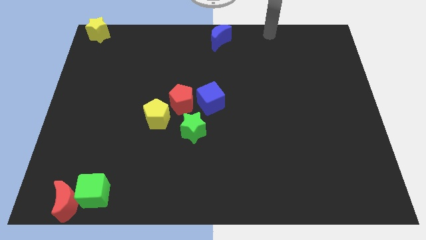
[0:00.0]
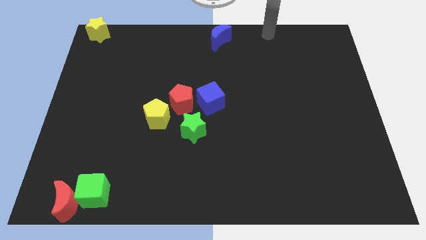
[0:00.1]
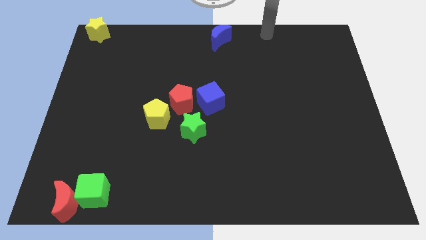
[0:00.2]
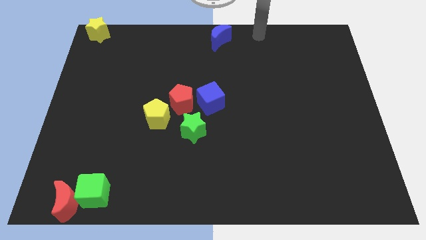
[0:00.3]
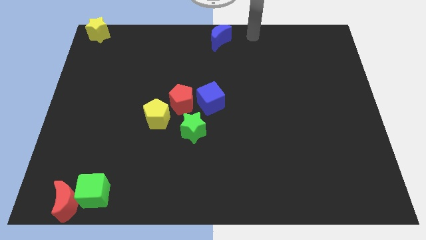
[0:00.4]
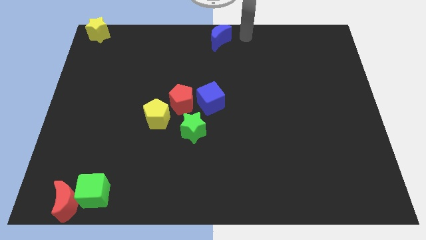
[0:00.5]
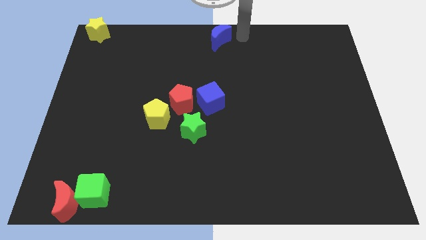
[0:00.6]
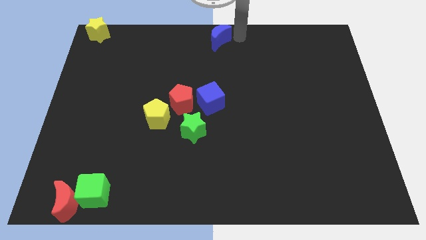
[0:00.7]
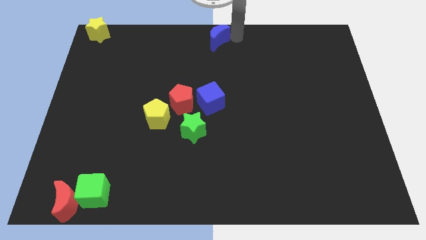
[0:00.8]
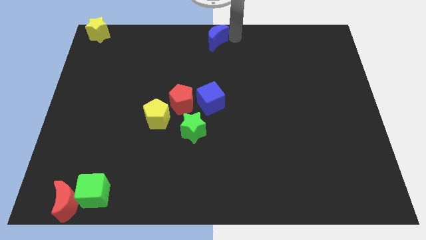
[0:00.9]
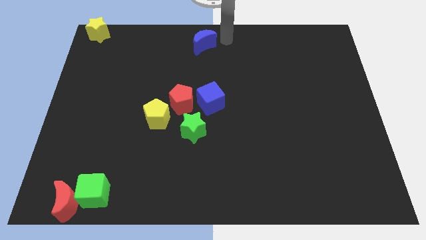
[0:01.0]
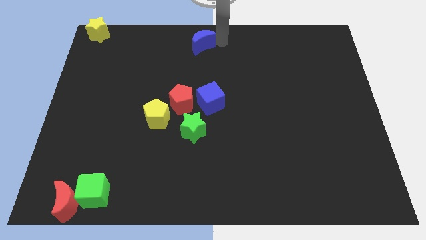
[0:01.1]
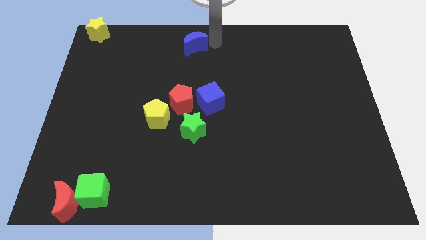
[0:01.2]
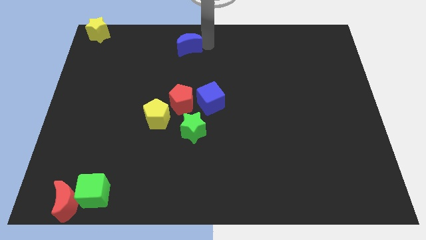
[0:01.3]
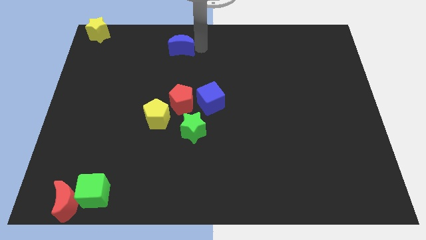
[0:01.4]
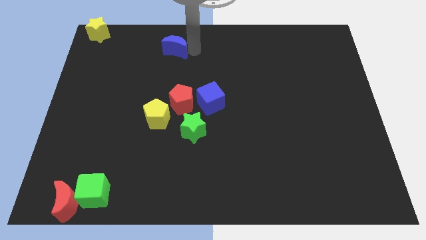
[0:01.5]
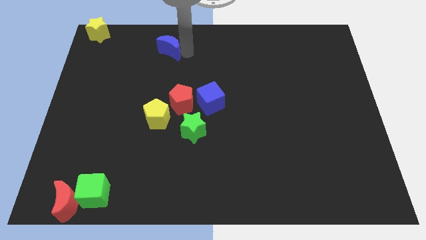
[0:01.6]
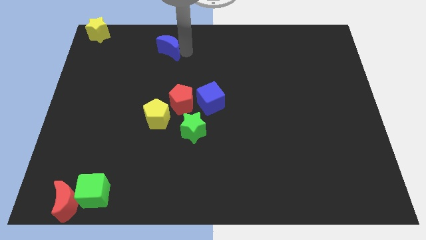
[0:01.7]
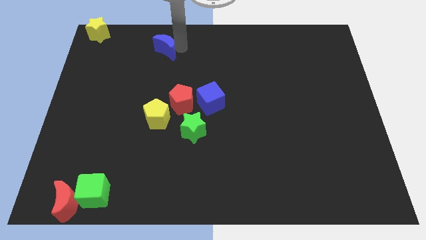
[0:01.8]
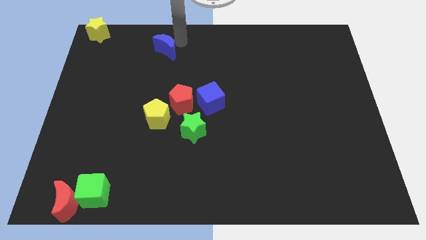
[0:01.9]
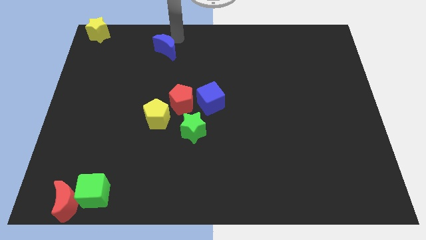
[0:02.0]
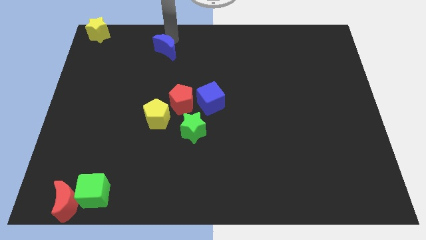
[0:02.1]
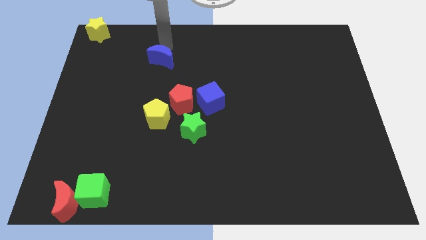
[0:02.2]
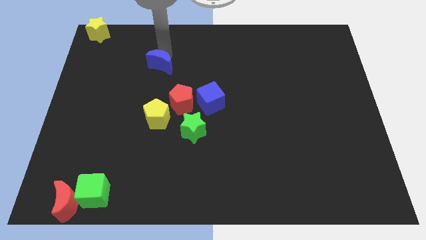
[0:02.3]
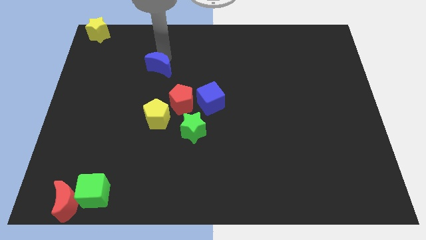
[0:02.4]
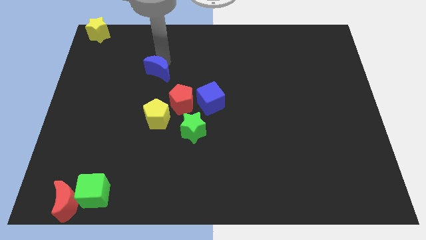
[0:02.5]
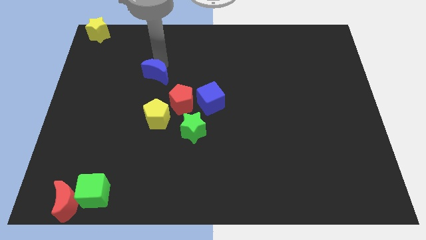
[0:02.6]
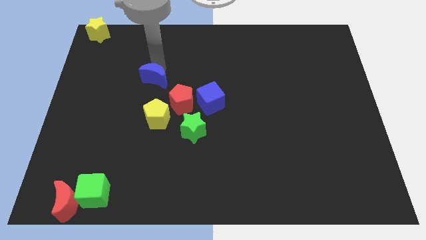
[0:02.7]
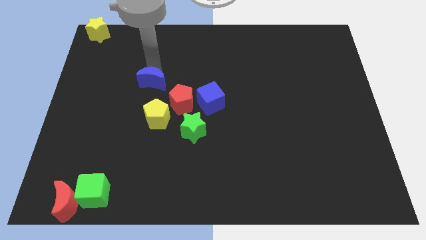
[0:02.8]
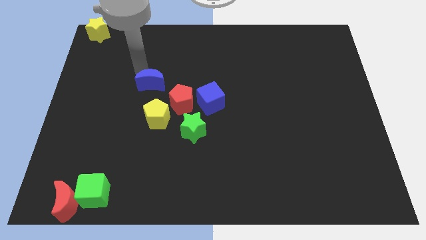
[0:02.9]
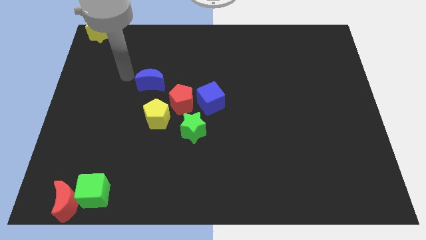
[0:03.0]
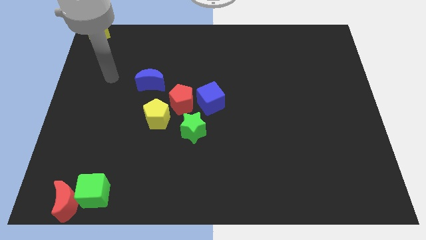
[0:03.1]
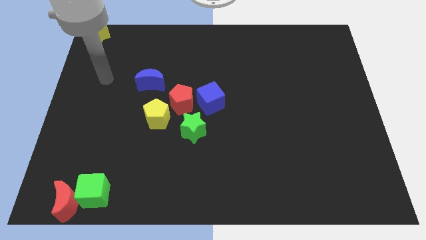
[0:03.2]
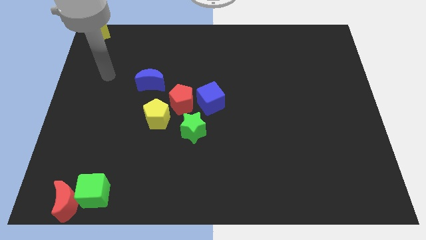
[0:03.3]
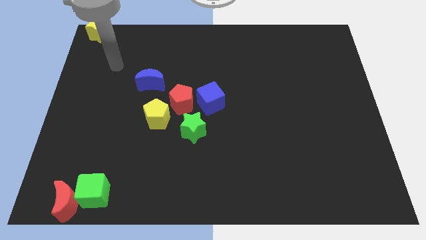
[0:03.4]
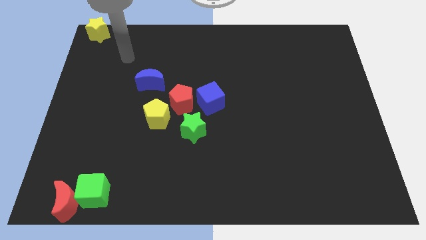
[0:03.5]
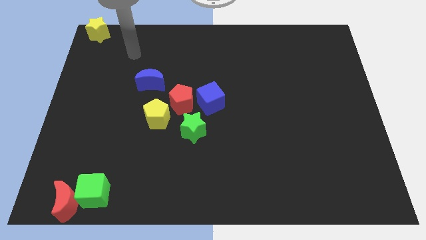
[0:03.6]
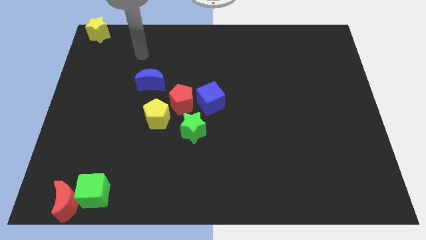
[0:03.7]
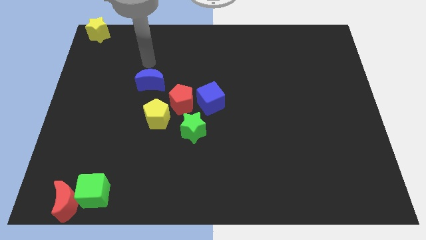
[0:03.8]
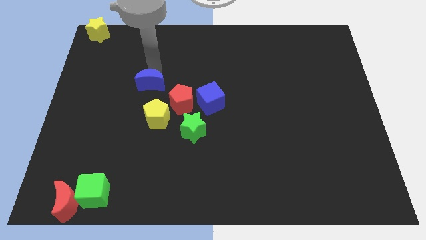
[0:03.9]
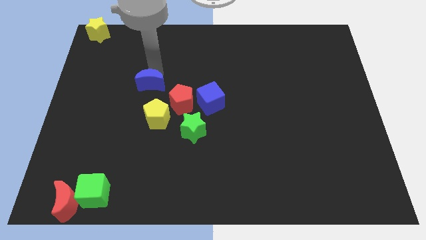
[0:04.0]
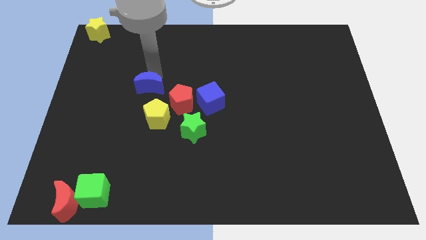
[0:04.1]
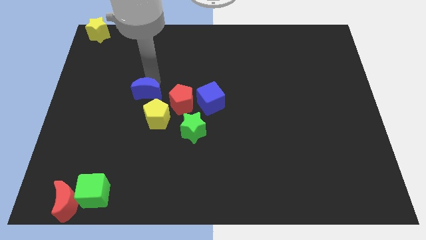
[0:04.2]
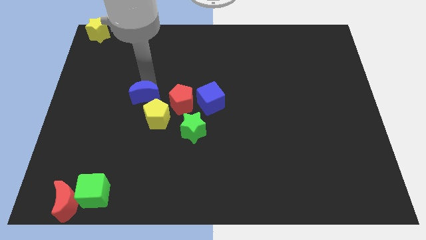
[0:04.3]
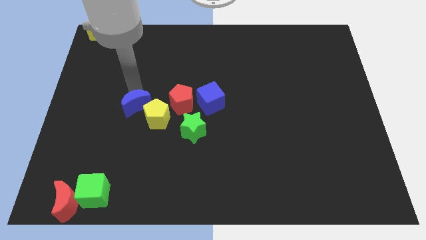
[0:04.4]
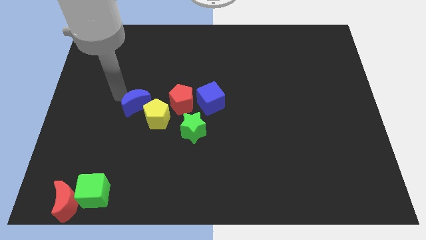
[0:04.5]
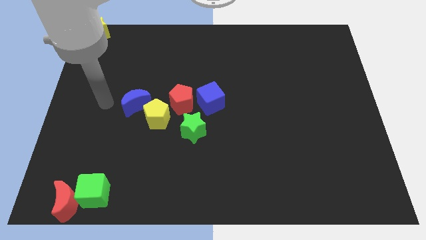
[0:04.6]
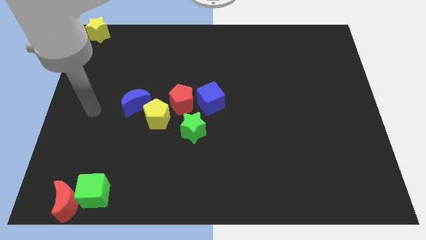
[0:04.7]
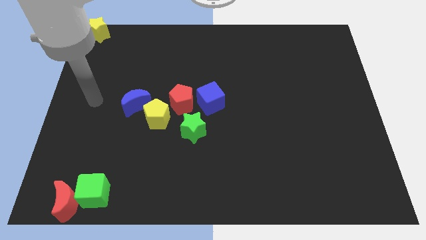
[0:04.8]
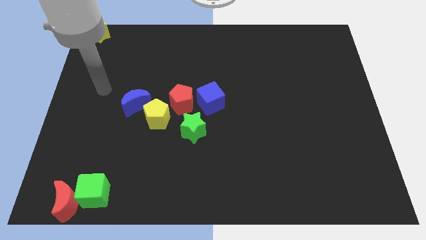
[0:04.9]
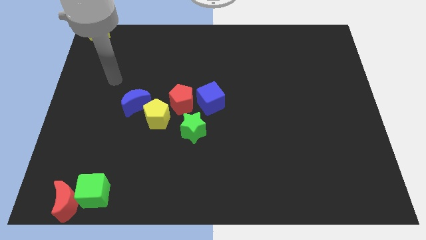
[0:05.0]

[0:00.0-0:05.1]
place the blue moon diagonal to bottom of the yellow star

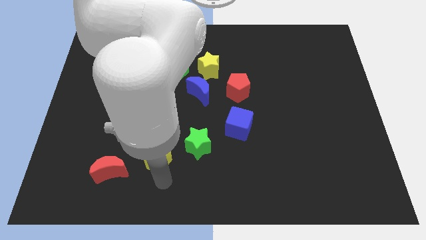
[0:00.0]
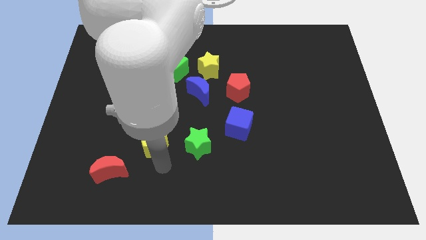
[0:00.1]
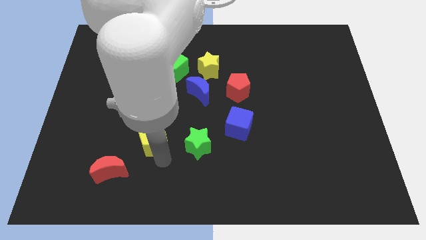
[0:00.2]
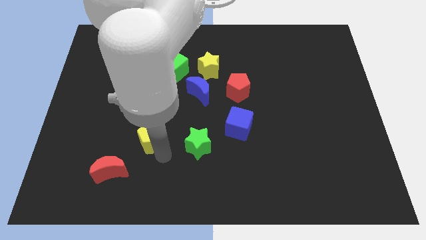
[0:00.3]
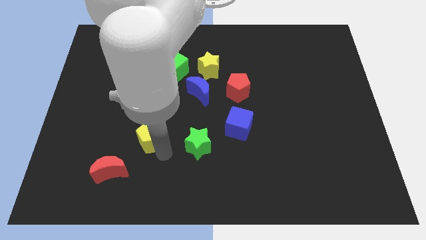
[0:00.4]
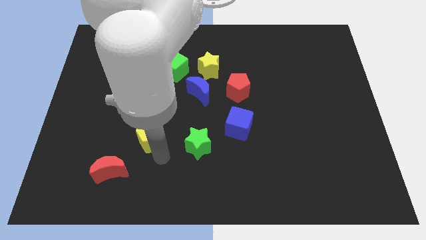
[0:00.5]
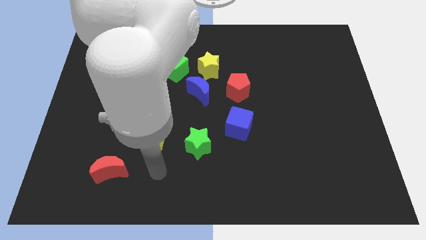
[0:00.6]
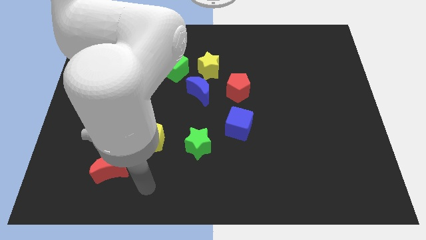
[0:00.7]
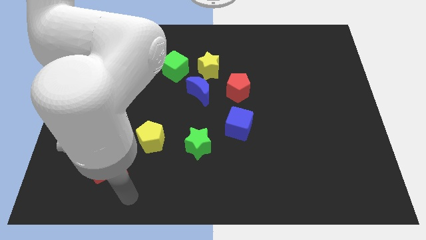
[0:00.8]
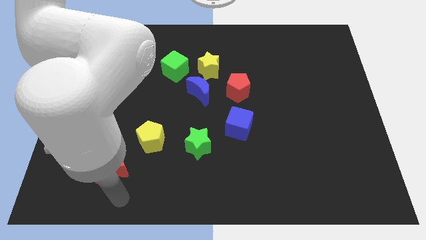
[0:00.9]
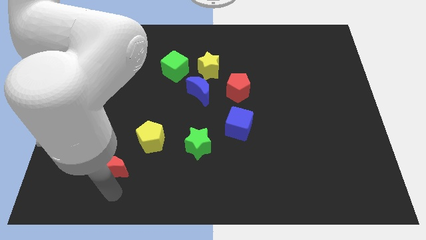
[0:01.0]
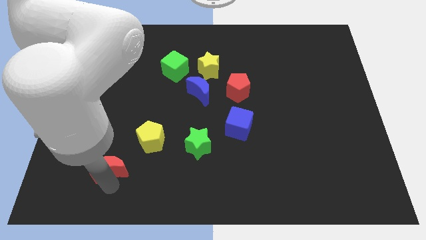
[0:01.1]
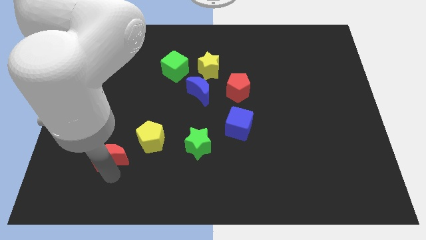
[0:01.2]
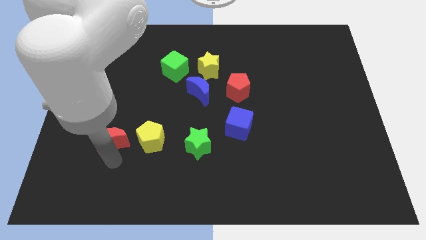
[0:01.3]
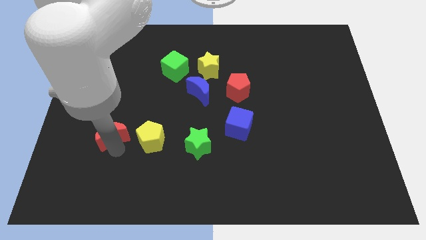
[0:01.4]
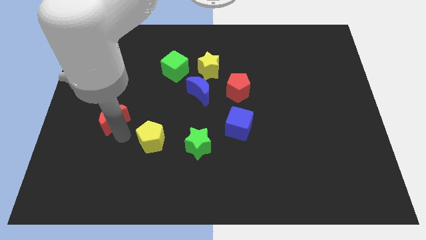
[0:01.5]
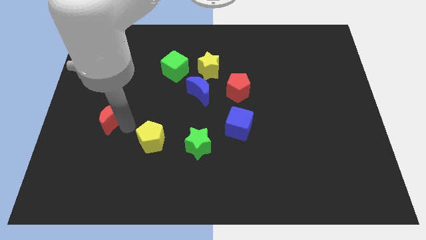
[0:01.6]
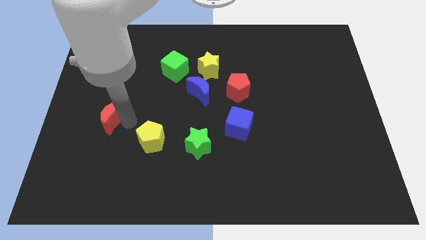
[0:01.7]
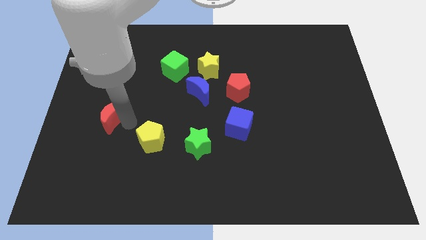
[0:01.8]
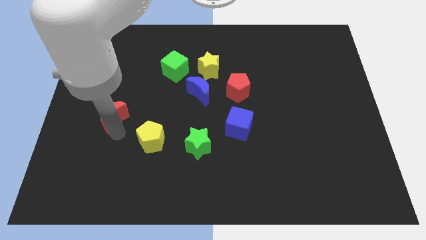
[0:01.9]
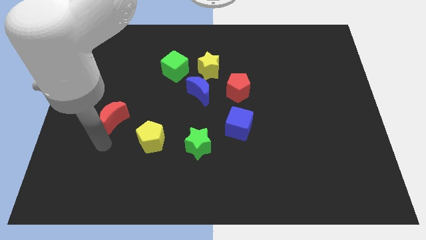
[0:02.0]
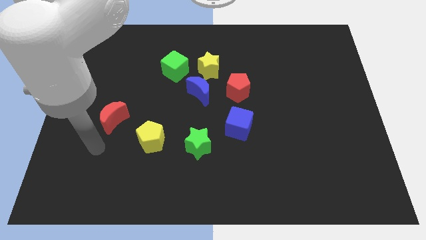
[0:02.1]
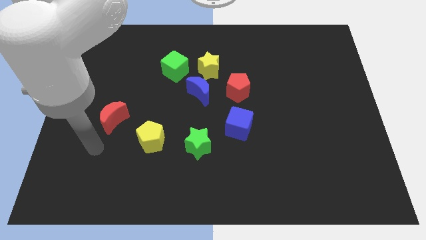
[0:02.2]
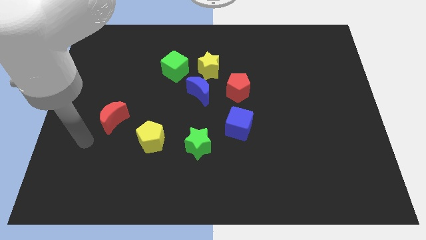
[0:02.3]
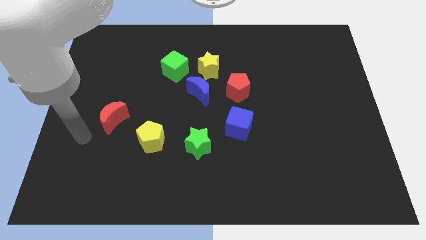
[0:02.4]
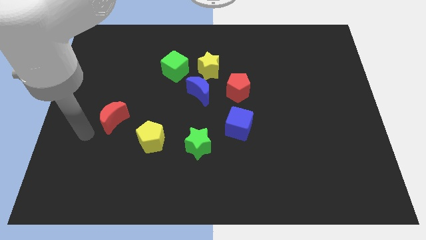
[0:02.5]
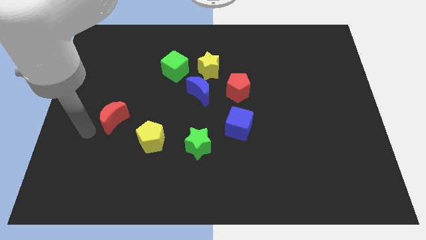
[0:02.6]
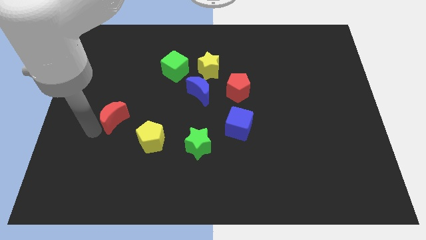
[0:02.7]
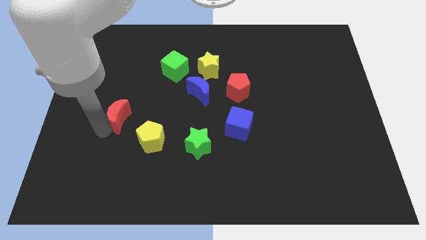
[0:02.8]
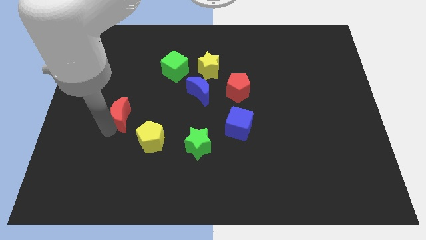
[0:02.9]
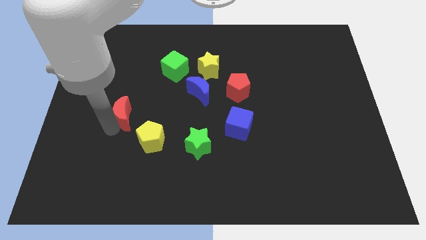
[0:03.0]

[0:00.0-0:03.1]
move the red moon to the top left of the yellow pentagon

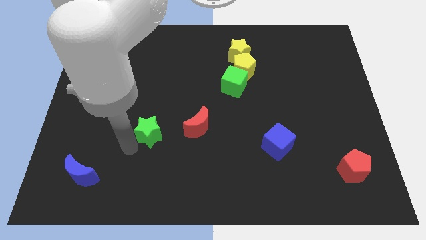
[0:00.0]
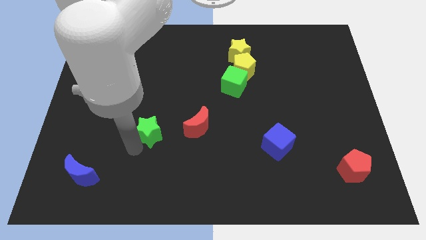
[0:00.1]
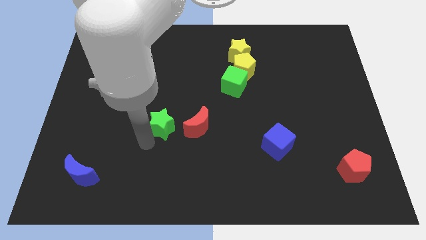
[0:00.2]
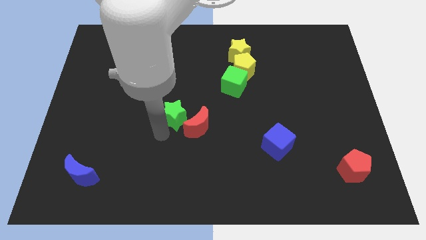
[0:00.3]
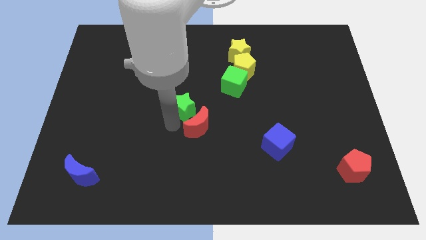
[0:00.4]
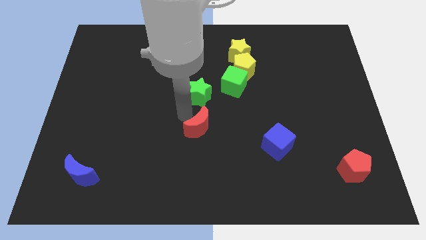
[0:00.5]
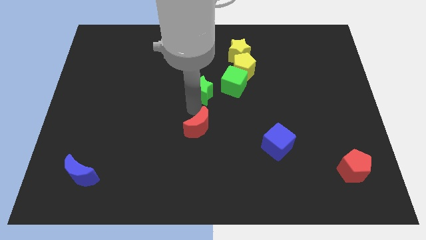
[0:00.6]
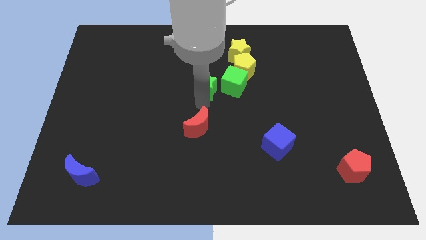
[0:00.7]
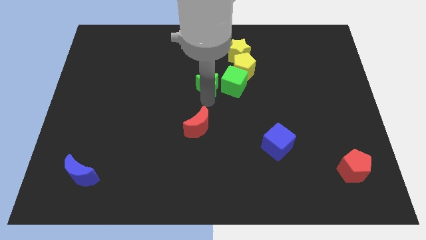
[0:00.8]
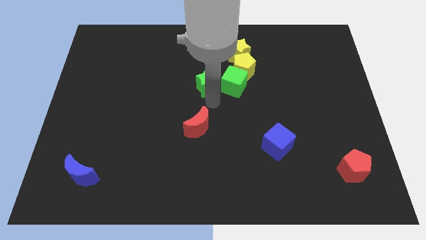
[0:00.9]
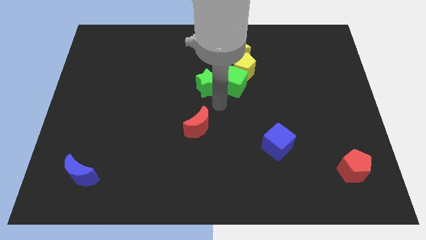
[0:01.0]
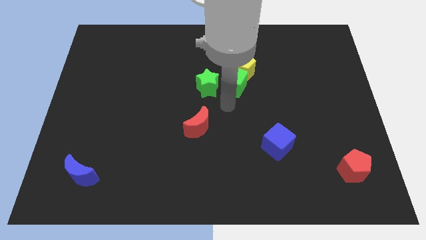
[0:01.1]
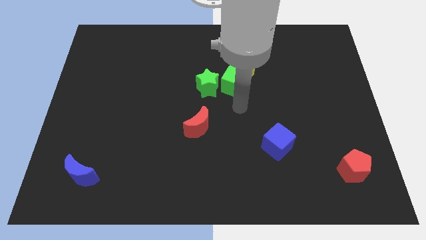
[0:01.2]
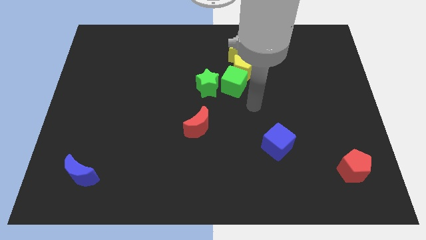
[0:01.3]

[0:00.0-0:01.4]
slide the green star to the left side of the green cube
